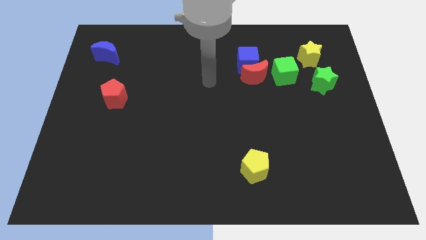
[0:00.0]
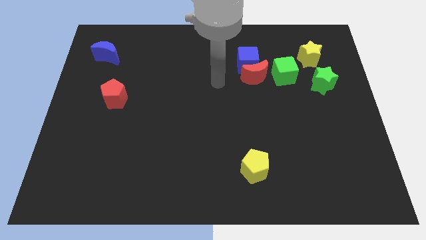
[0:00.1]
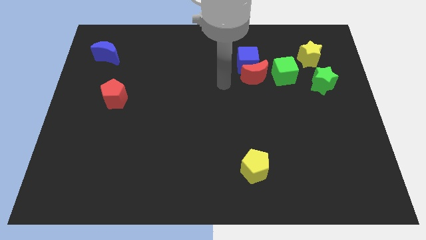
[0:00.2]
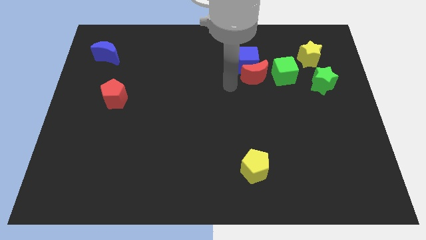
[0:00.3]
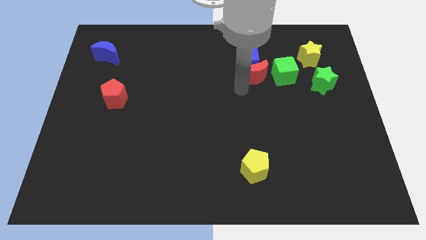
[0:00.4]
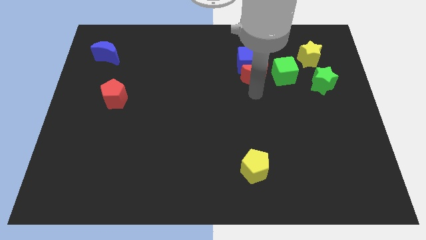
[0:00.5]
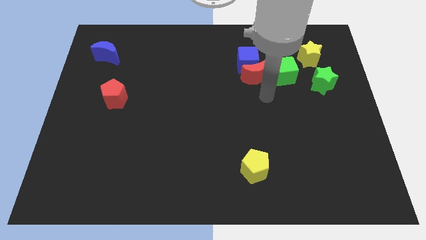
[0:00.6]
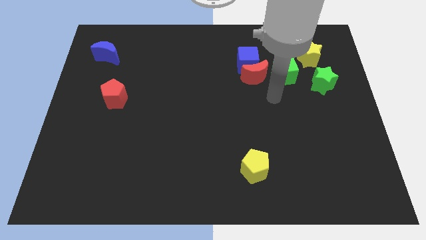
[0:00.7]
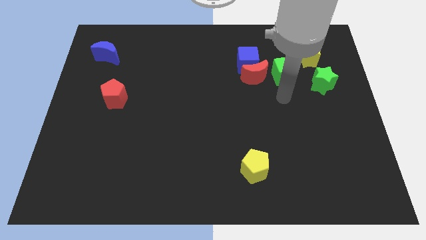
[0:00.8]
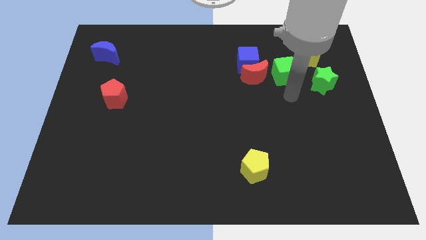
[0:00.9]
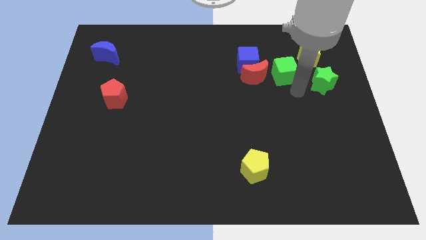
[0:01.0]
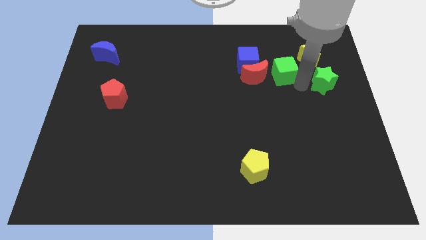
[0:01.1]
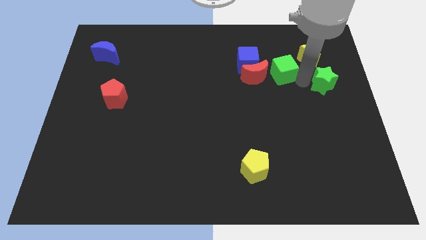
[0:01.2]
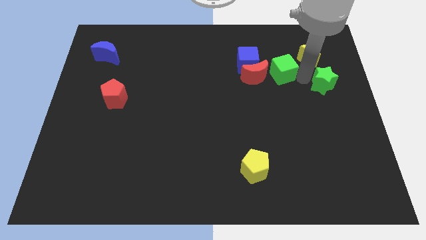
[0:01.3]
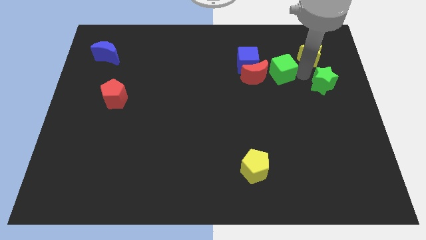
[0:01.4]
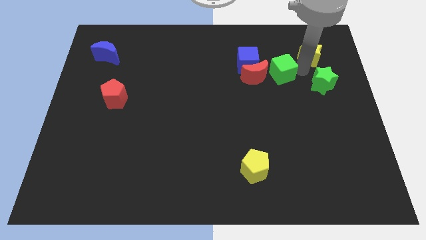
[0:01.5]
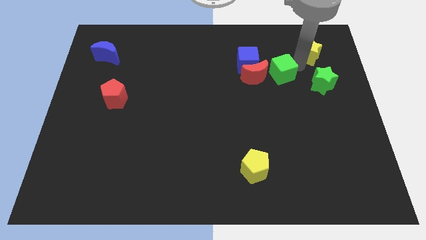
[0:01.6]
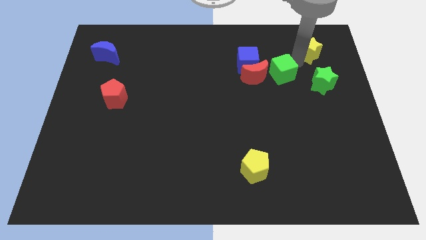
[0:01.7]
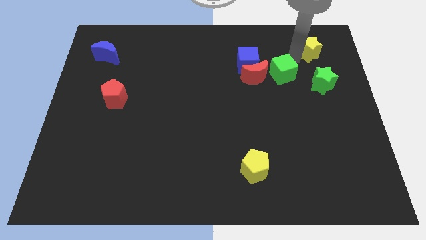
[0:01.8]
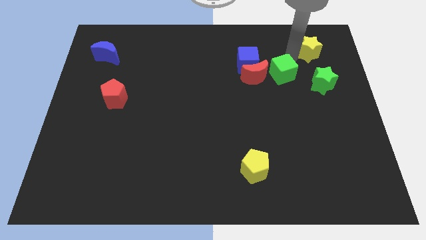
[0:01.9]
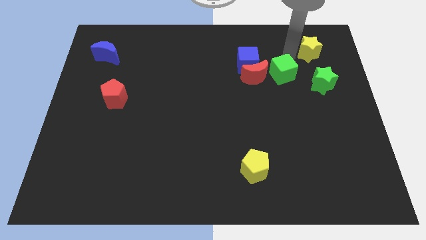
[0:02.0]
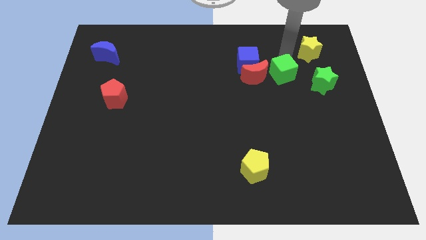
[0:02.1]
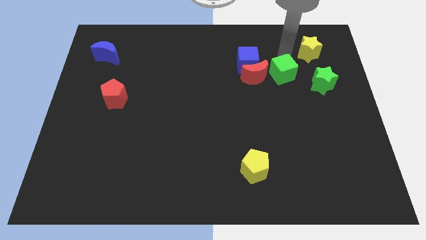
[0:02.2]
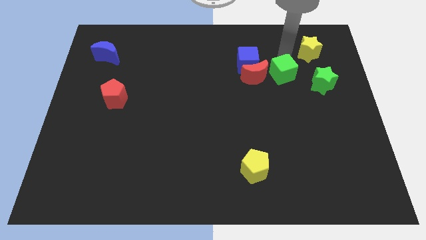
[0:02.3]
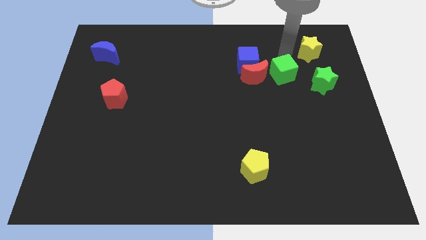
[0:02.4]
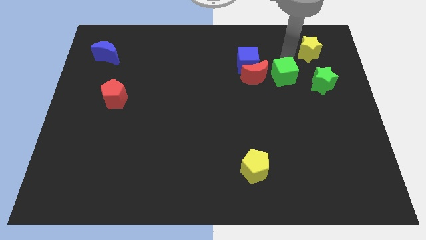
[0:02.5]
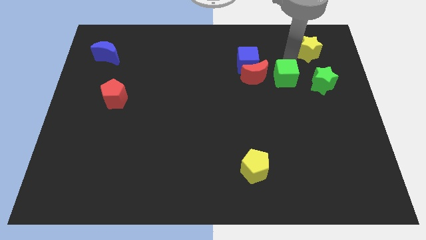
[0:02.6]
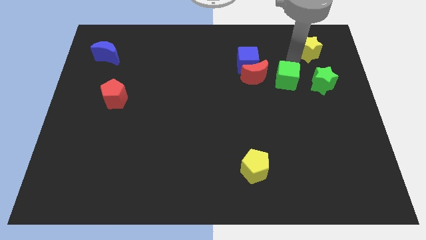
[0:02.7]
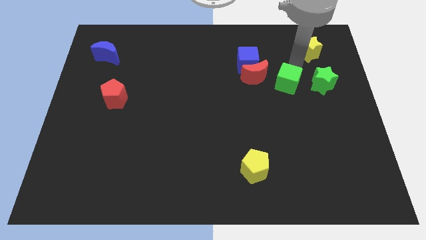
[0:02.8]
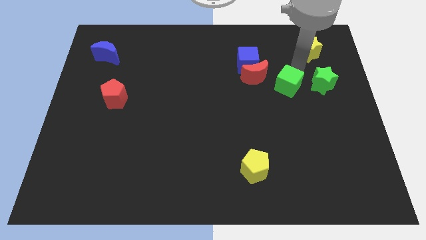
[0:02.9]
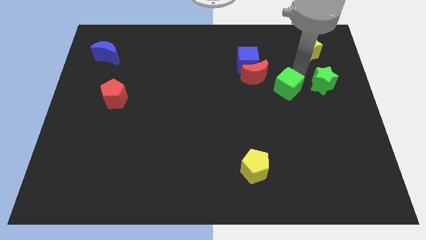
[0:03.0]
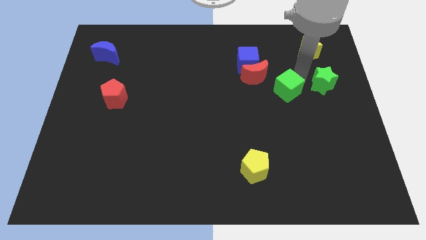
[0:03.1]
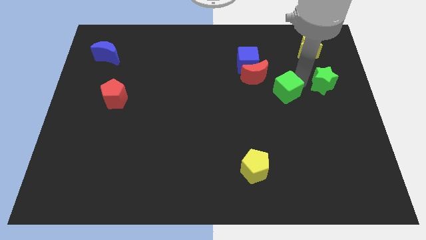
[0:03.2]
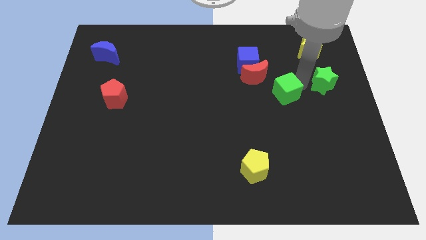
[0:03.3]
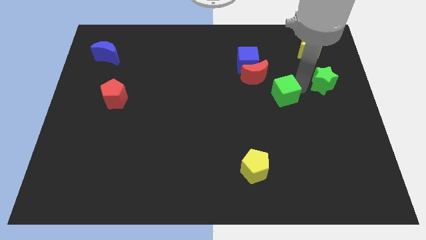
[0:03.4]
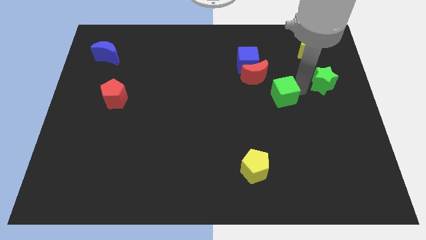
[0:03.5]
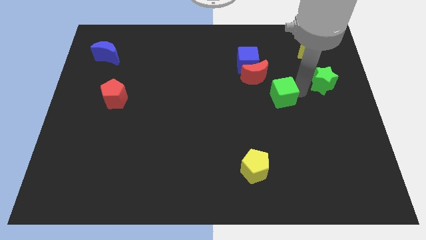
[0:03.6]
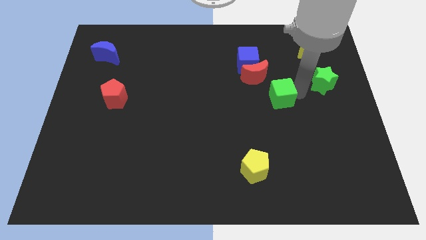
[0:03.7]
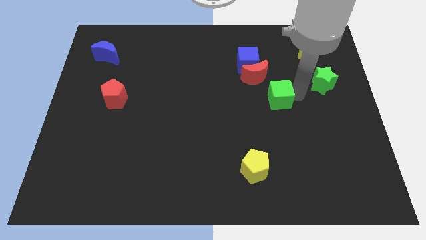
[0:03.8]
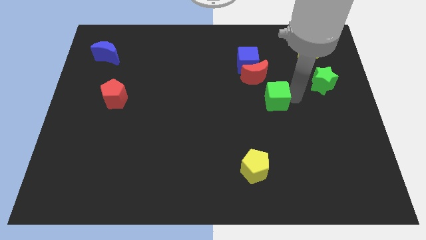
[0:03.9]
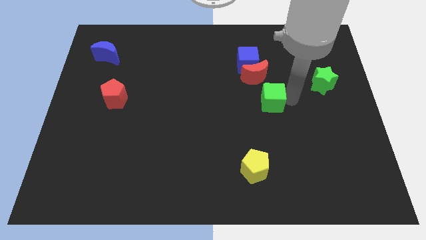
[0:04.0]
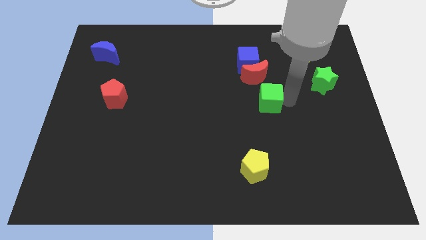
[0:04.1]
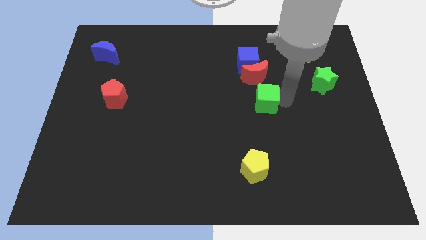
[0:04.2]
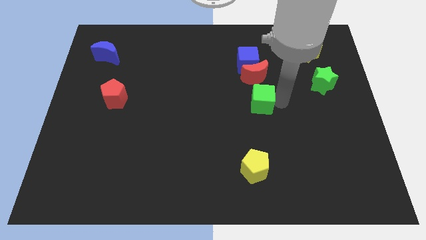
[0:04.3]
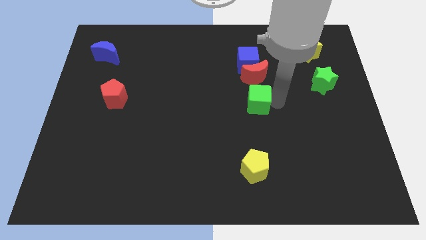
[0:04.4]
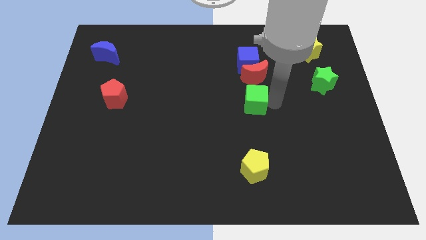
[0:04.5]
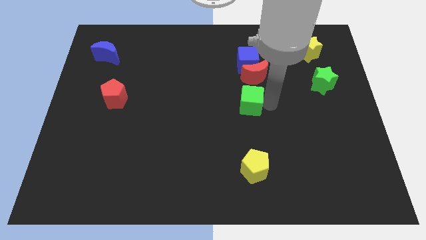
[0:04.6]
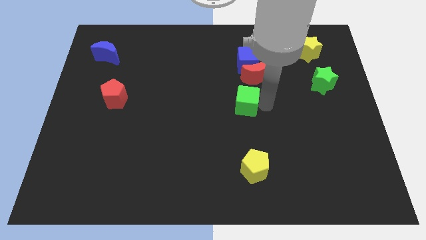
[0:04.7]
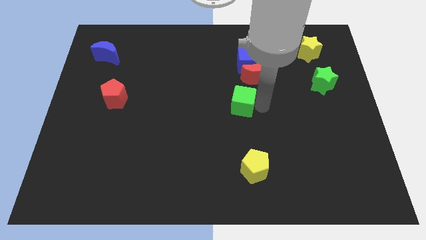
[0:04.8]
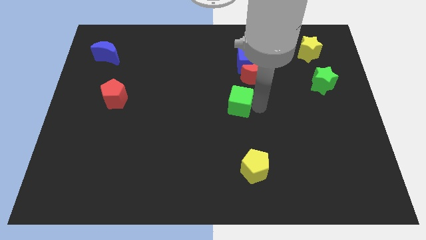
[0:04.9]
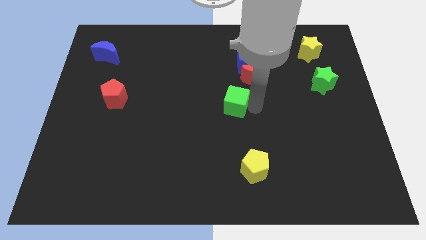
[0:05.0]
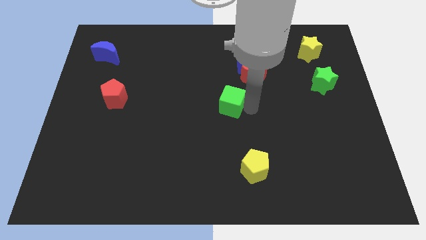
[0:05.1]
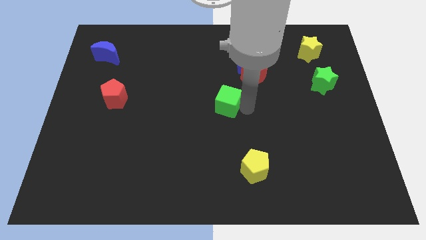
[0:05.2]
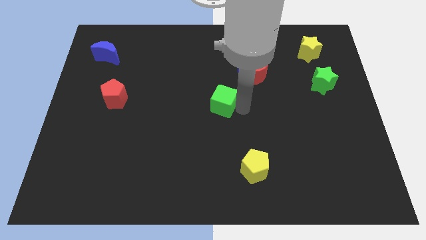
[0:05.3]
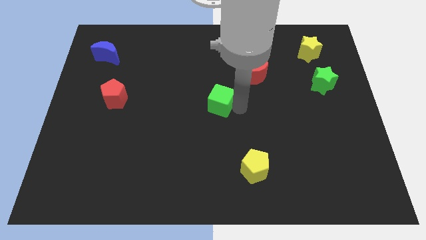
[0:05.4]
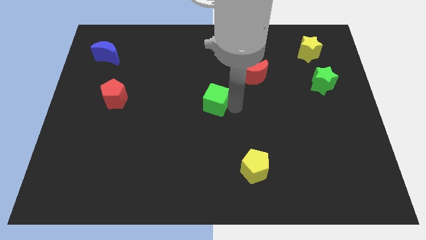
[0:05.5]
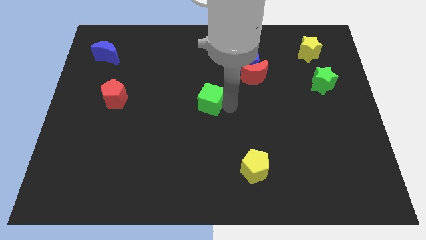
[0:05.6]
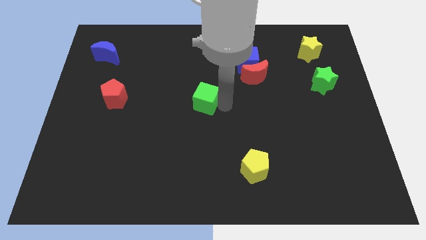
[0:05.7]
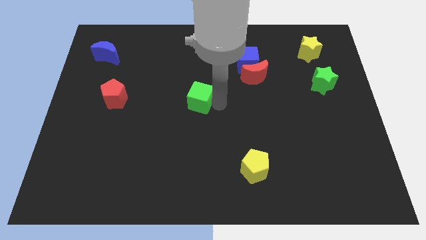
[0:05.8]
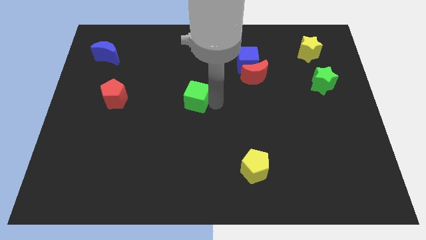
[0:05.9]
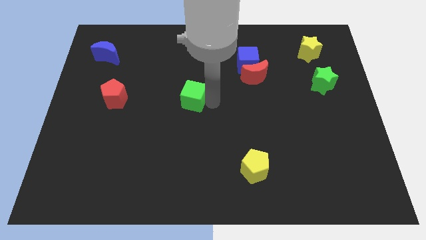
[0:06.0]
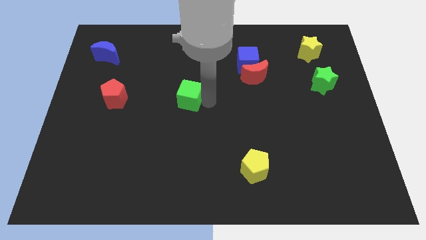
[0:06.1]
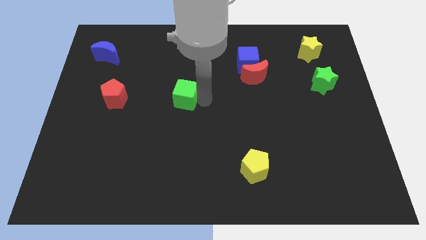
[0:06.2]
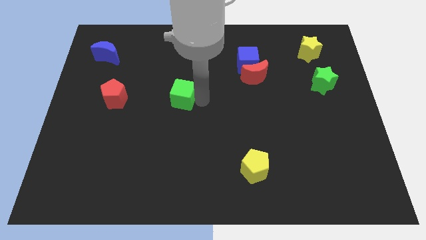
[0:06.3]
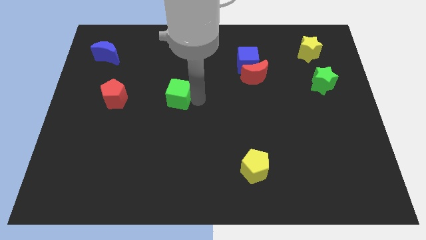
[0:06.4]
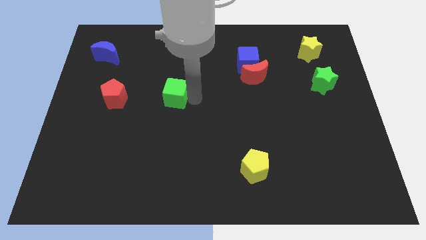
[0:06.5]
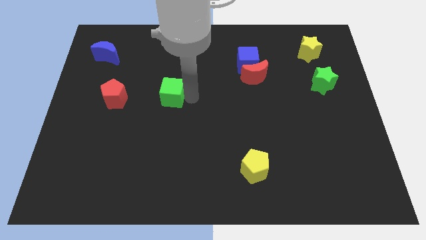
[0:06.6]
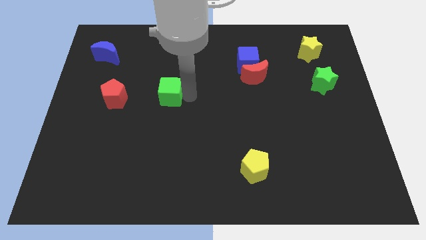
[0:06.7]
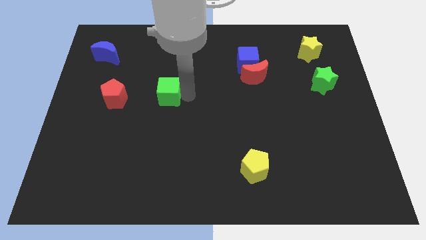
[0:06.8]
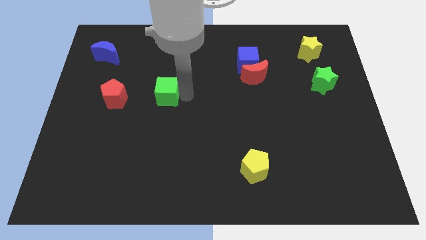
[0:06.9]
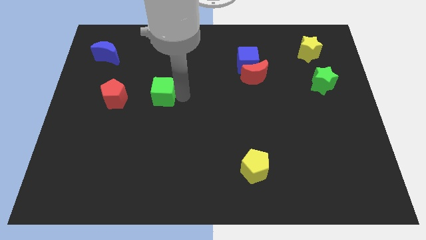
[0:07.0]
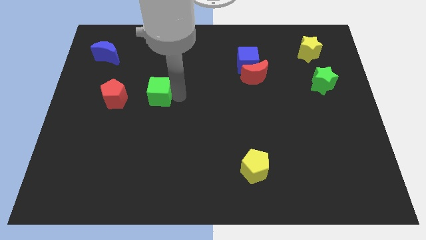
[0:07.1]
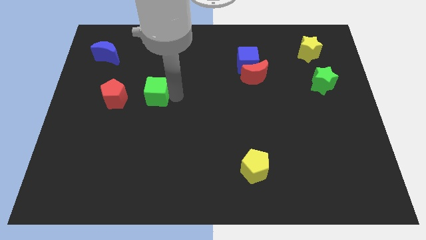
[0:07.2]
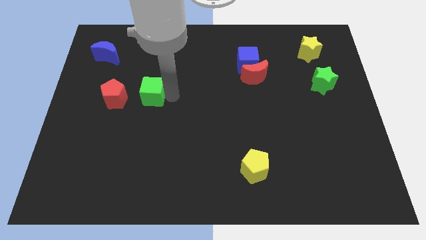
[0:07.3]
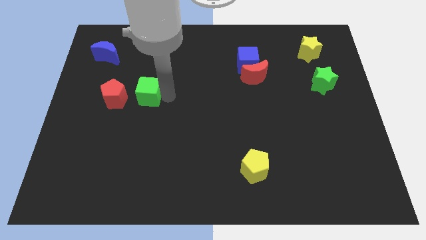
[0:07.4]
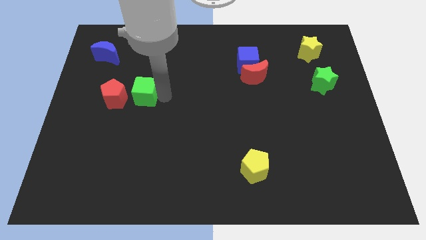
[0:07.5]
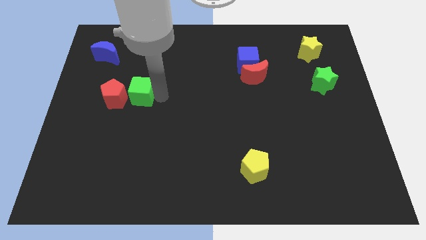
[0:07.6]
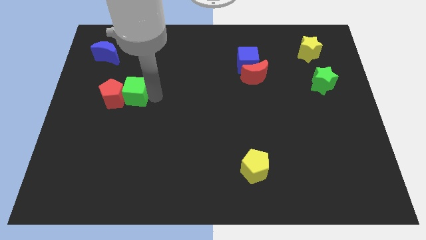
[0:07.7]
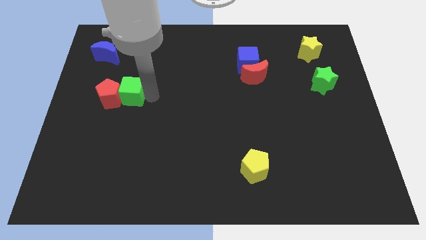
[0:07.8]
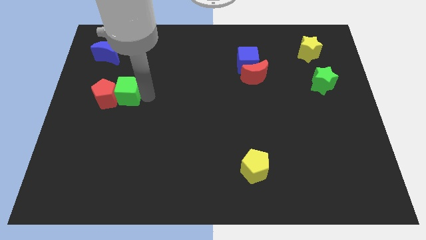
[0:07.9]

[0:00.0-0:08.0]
push the green cube next to the red pentagon

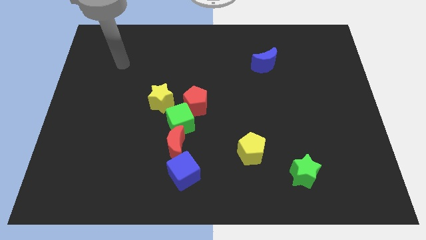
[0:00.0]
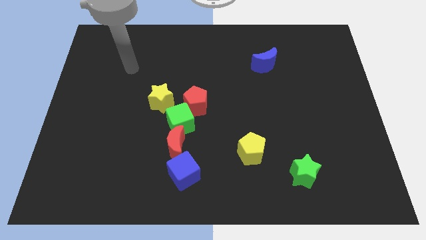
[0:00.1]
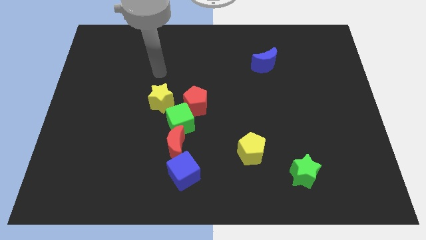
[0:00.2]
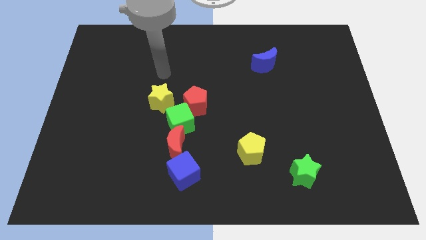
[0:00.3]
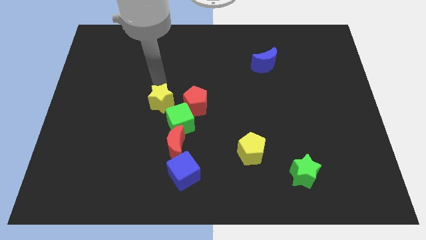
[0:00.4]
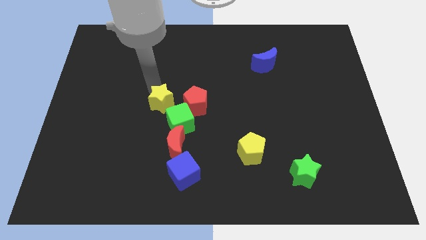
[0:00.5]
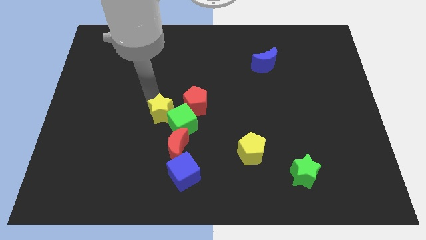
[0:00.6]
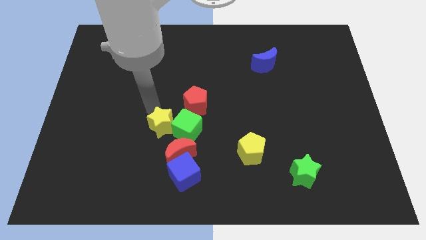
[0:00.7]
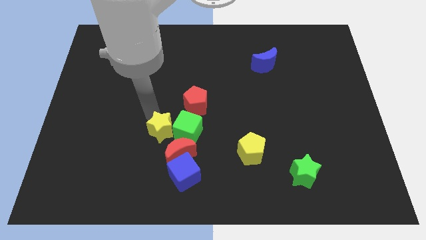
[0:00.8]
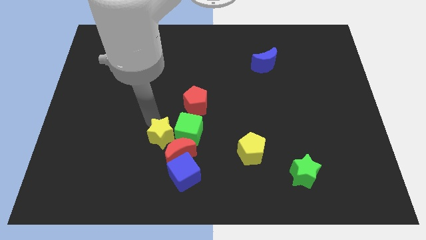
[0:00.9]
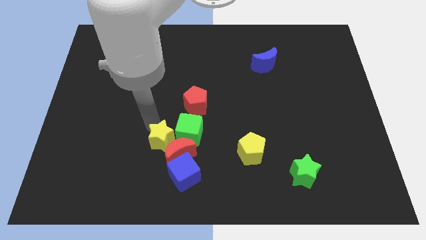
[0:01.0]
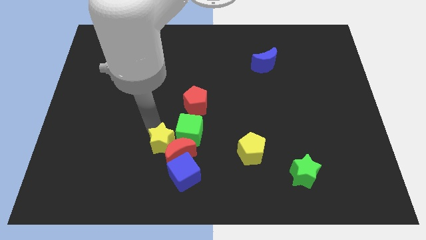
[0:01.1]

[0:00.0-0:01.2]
push the yellow star next to the red moon
